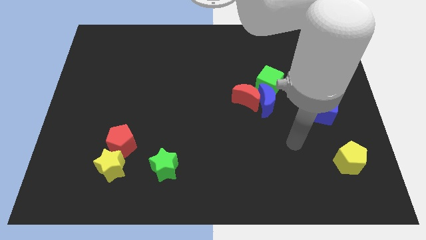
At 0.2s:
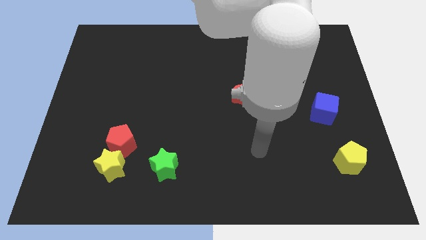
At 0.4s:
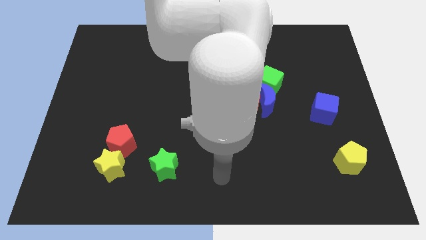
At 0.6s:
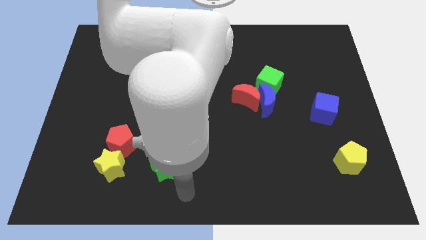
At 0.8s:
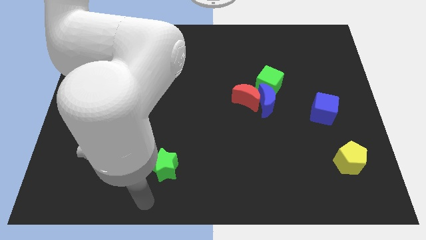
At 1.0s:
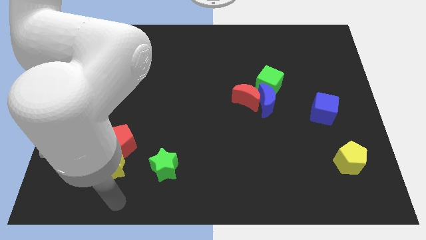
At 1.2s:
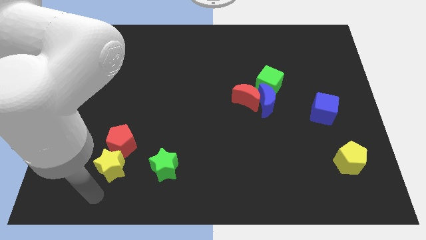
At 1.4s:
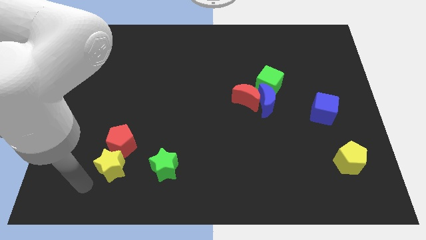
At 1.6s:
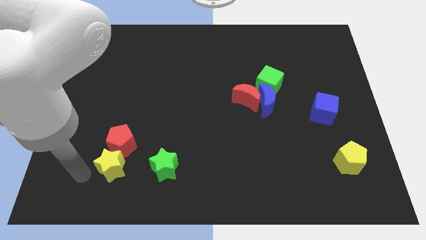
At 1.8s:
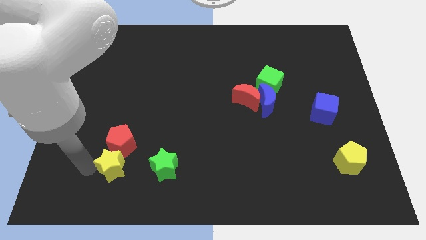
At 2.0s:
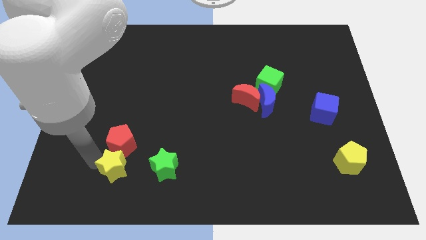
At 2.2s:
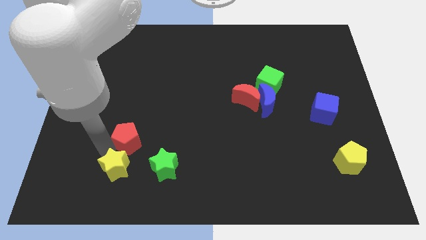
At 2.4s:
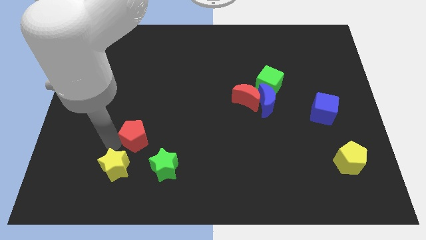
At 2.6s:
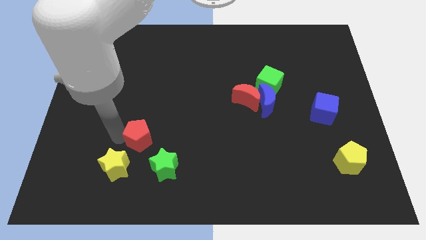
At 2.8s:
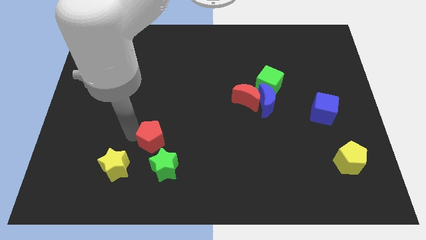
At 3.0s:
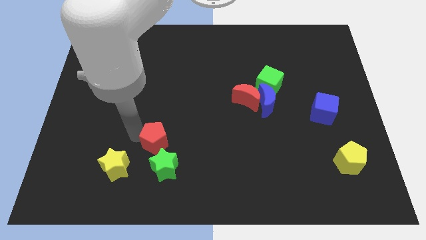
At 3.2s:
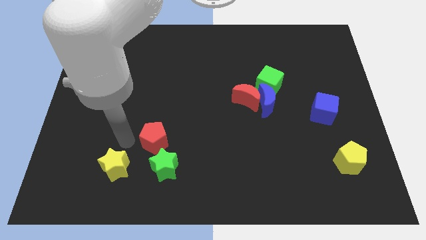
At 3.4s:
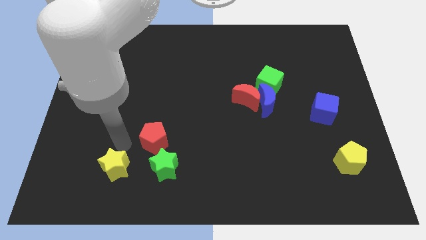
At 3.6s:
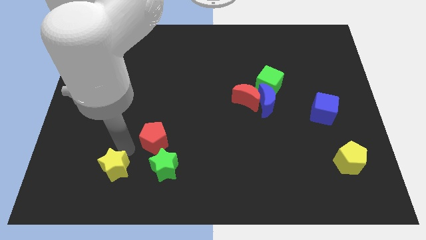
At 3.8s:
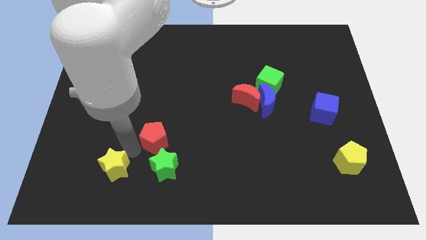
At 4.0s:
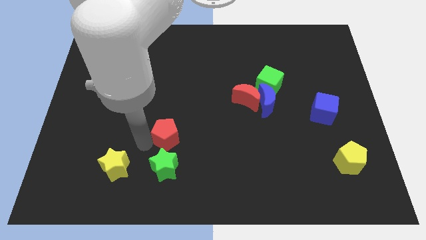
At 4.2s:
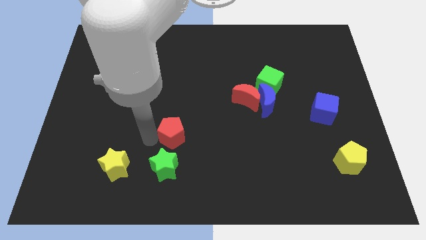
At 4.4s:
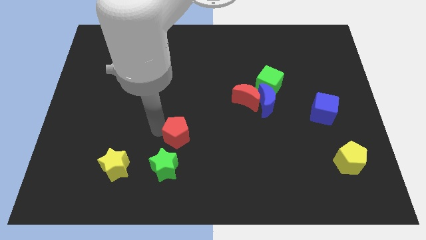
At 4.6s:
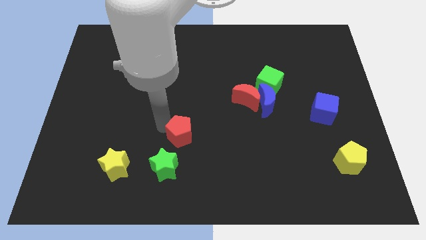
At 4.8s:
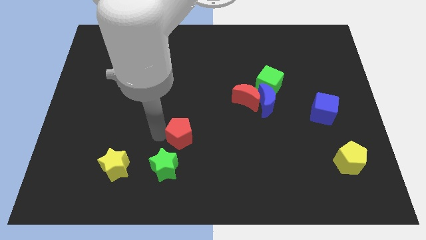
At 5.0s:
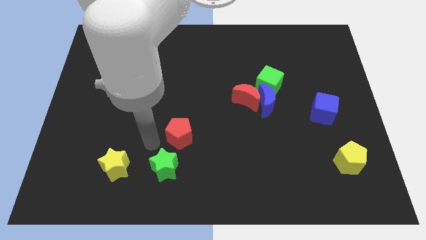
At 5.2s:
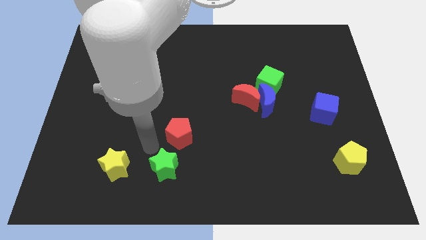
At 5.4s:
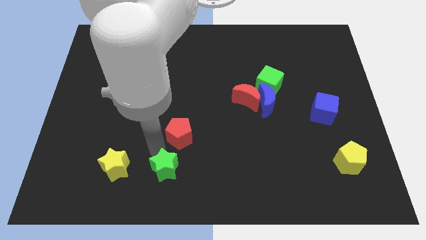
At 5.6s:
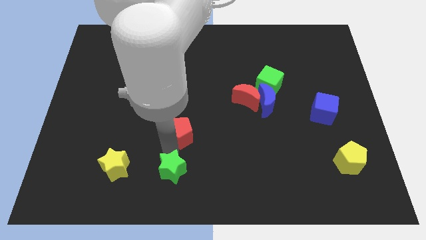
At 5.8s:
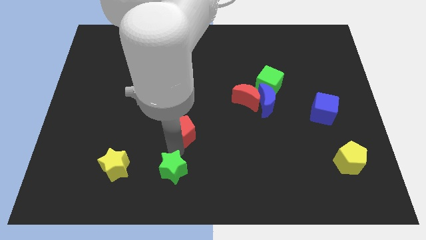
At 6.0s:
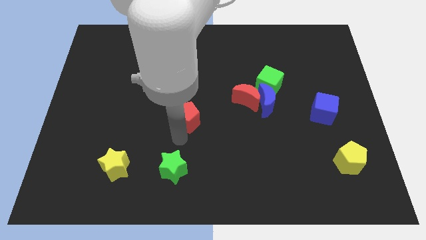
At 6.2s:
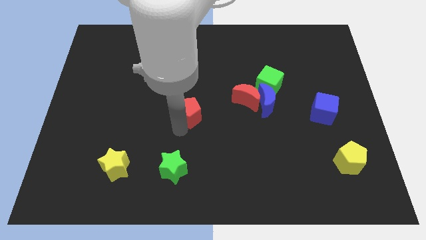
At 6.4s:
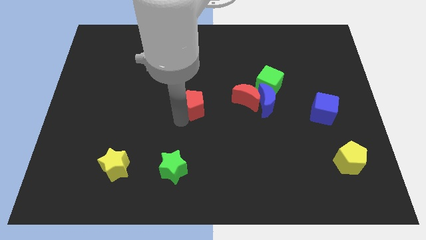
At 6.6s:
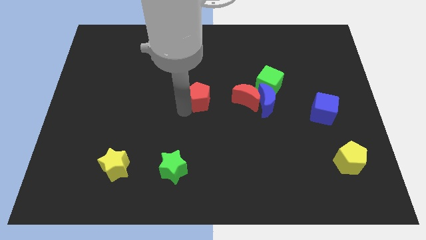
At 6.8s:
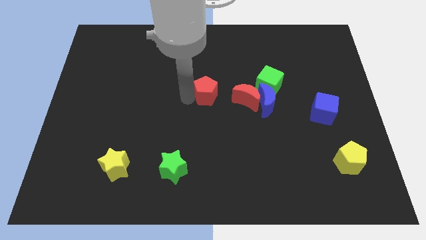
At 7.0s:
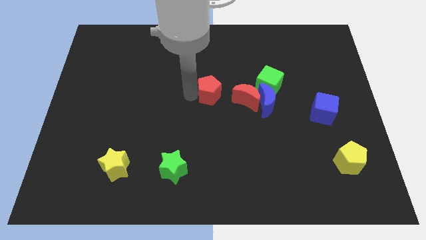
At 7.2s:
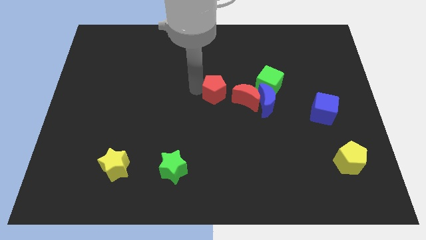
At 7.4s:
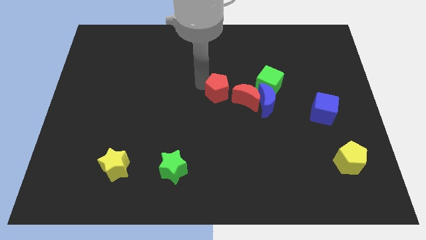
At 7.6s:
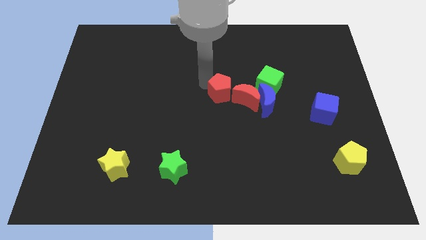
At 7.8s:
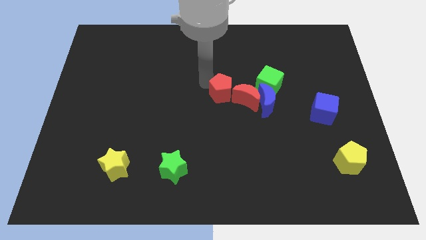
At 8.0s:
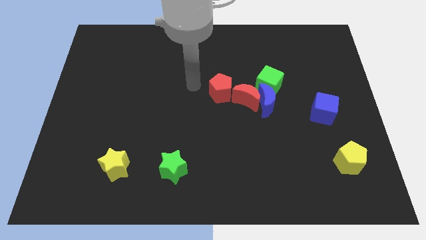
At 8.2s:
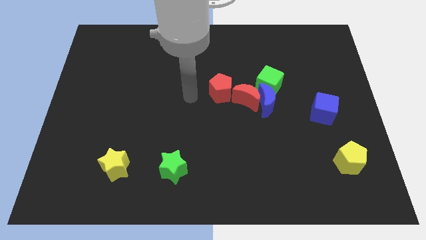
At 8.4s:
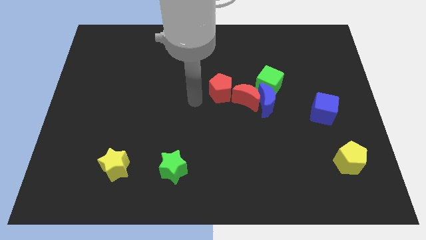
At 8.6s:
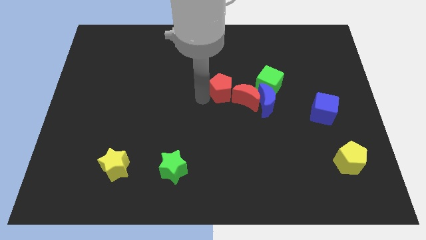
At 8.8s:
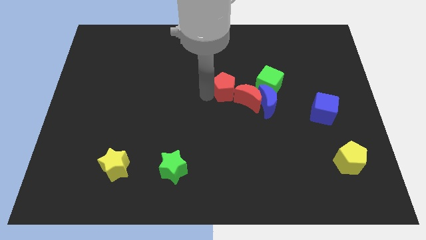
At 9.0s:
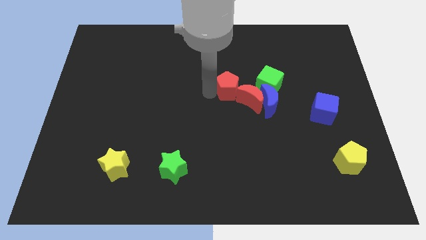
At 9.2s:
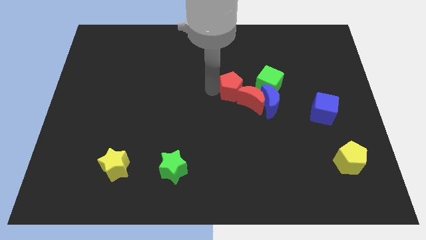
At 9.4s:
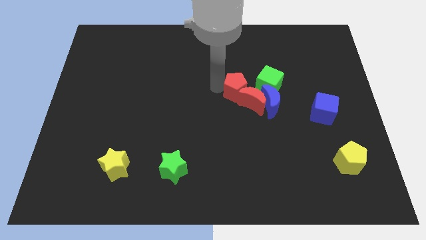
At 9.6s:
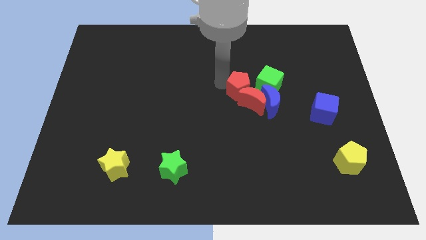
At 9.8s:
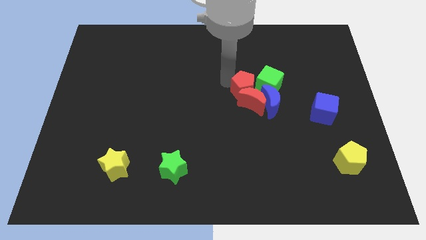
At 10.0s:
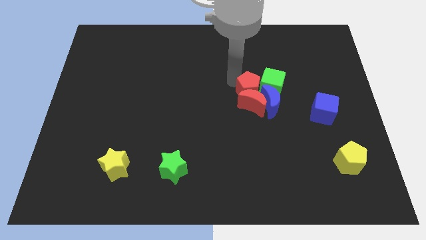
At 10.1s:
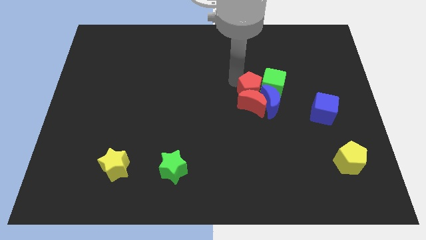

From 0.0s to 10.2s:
move the red pentagon next to the green cube

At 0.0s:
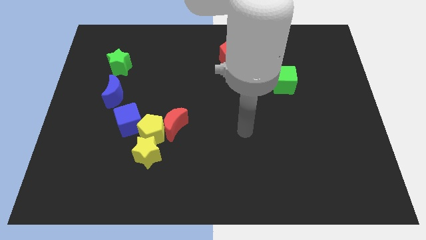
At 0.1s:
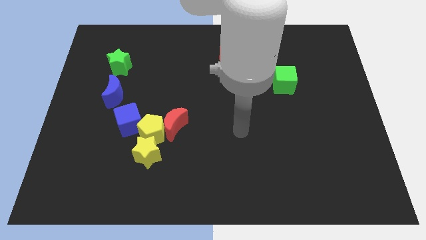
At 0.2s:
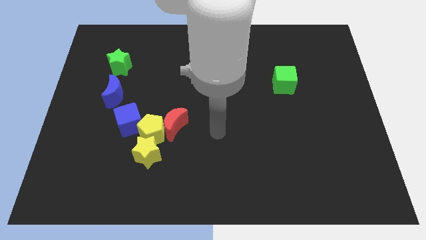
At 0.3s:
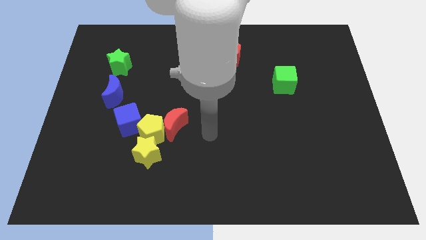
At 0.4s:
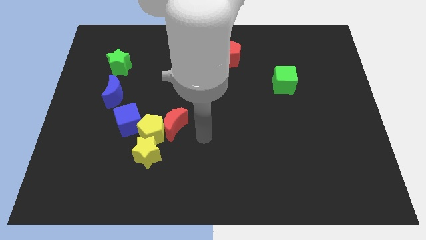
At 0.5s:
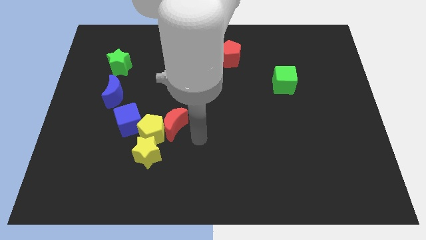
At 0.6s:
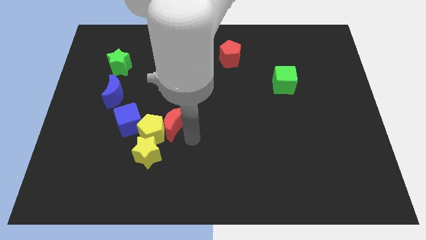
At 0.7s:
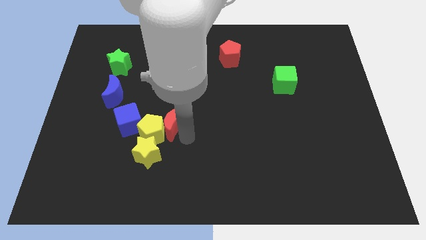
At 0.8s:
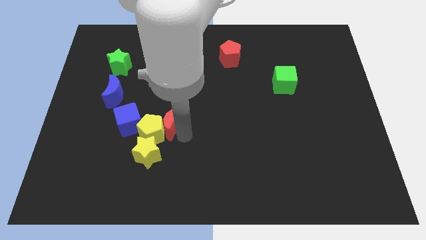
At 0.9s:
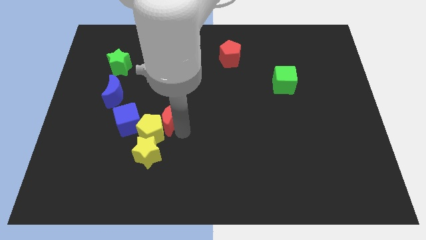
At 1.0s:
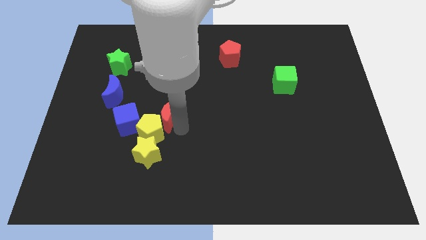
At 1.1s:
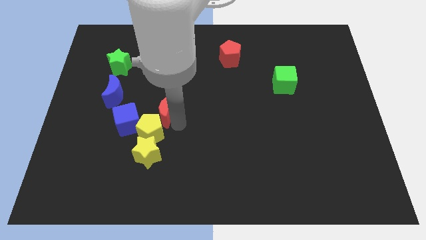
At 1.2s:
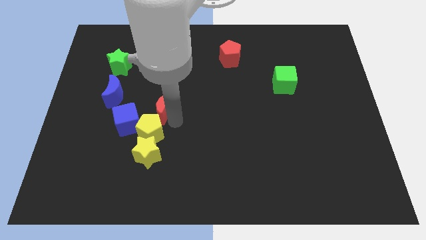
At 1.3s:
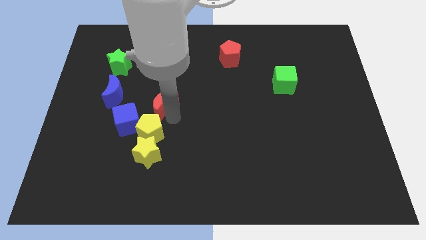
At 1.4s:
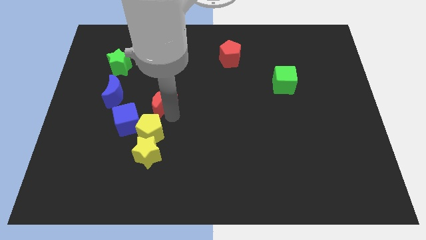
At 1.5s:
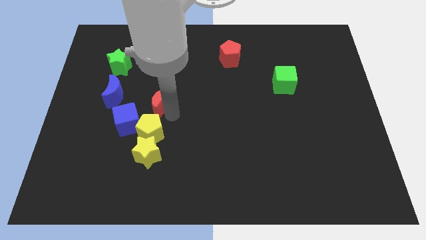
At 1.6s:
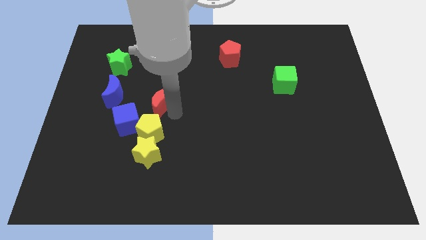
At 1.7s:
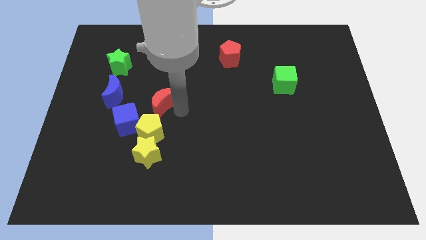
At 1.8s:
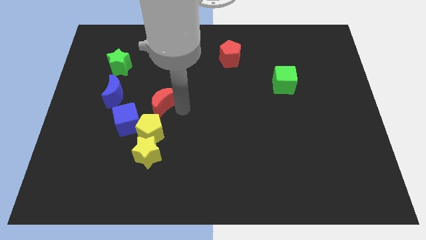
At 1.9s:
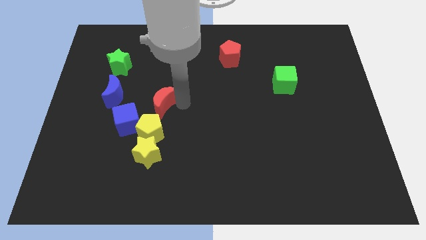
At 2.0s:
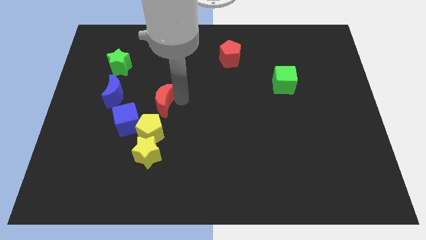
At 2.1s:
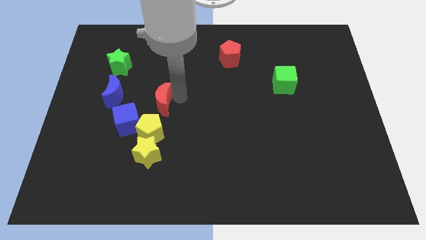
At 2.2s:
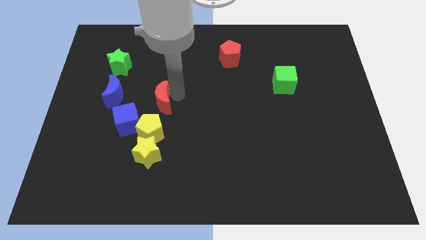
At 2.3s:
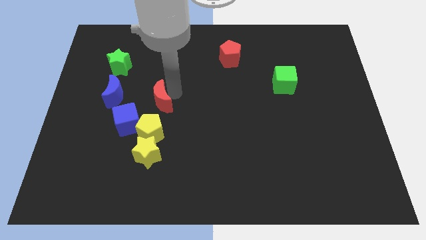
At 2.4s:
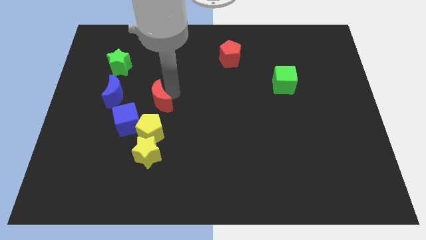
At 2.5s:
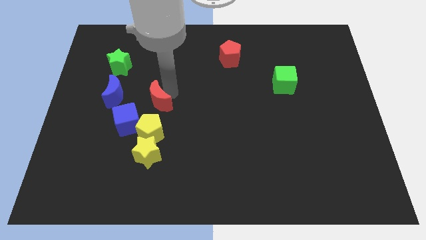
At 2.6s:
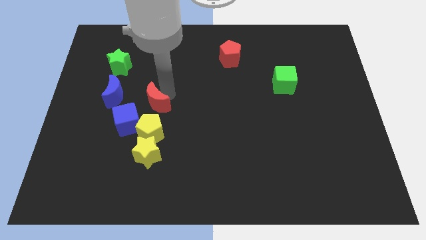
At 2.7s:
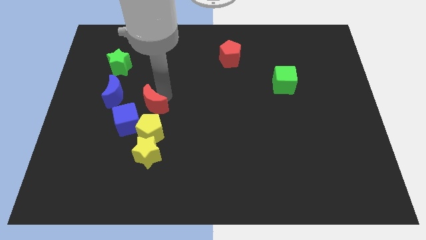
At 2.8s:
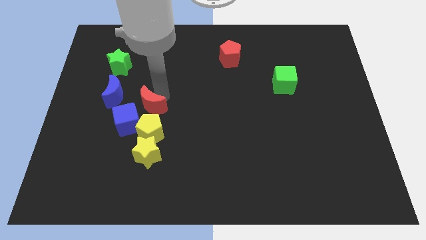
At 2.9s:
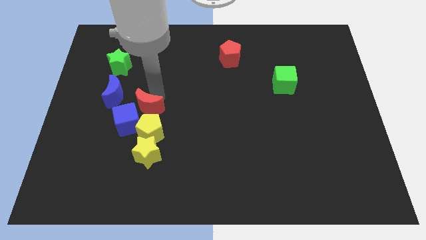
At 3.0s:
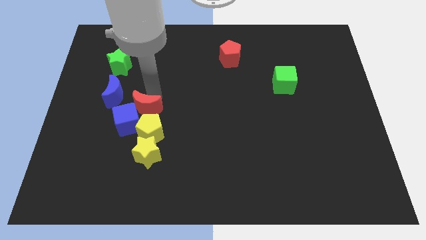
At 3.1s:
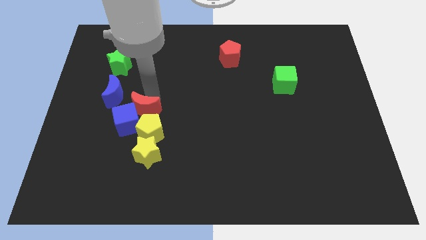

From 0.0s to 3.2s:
push the red moon next to the blue cube
